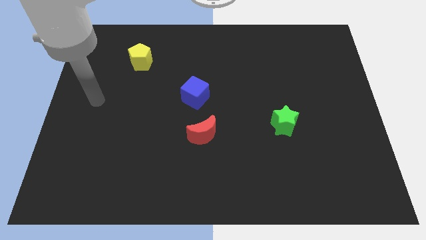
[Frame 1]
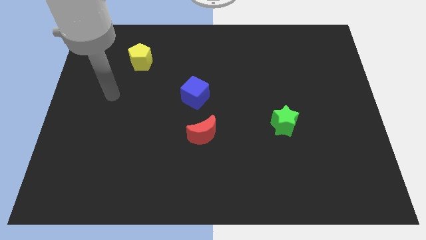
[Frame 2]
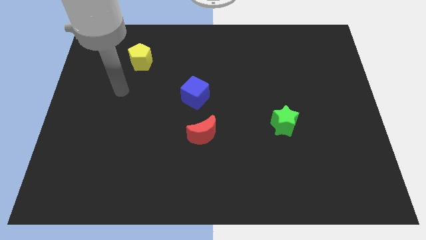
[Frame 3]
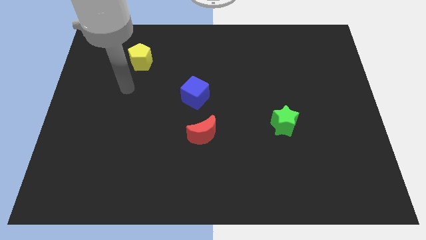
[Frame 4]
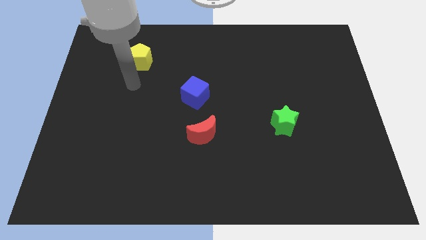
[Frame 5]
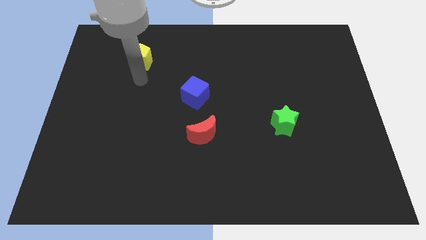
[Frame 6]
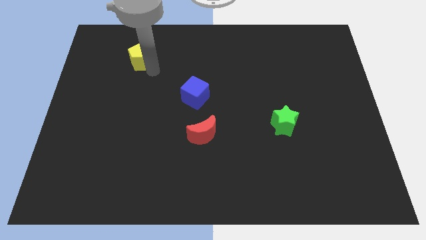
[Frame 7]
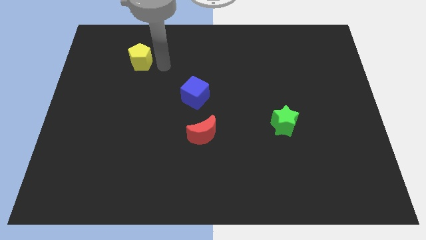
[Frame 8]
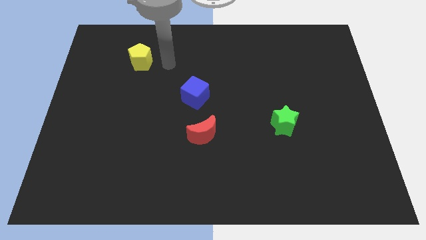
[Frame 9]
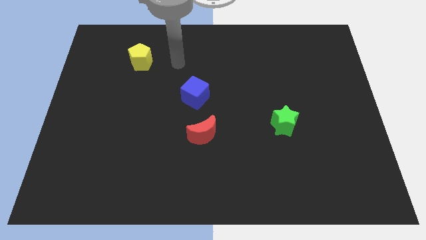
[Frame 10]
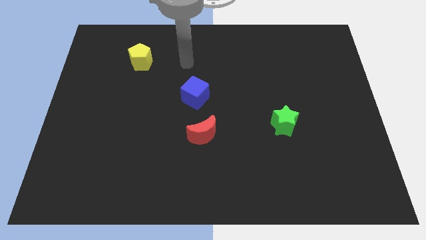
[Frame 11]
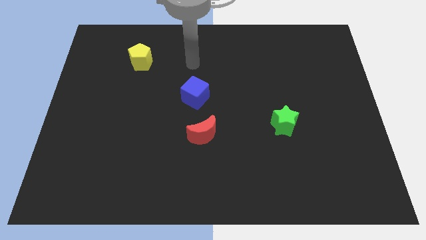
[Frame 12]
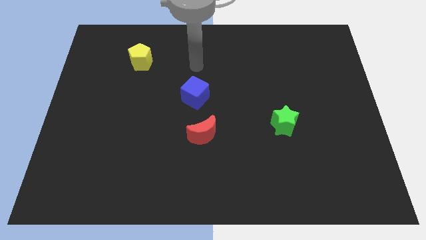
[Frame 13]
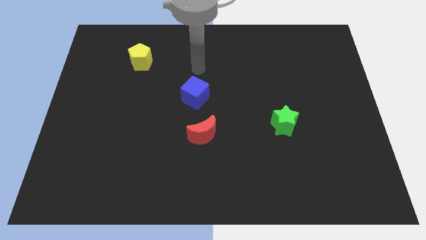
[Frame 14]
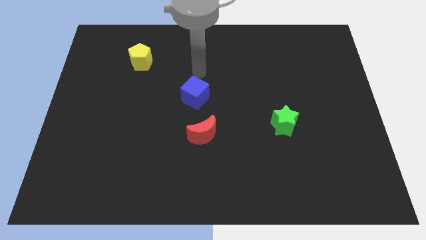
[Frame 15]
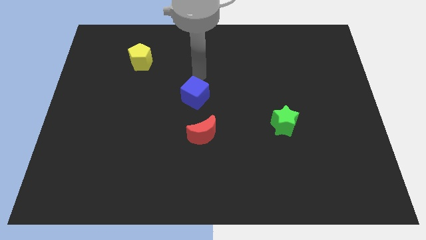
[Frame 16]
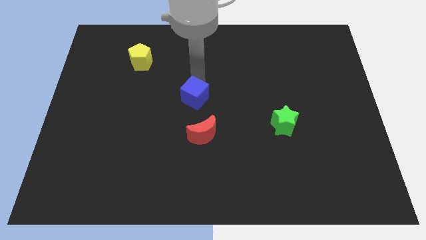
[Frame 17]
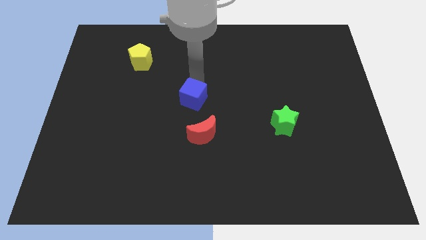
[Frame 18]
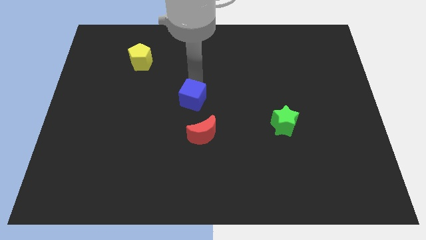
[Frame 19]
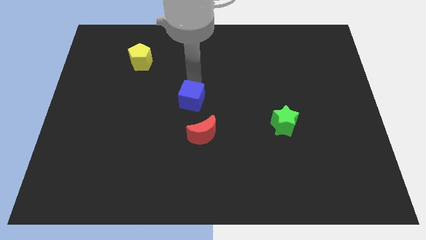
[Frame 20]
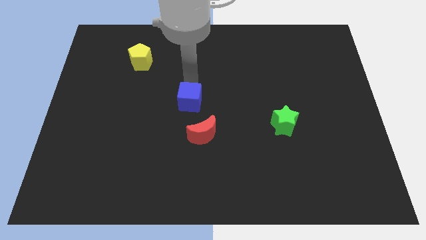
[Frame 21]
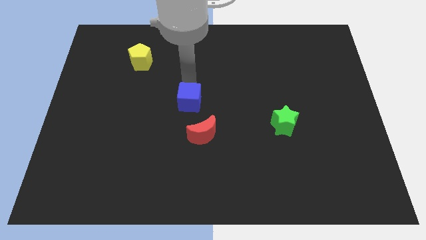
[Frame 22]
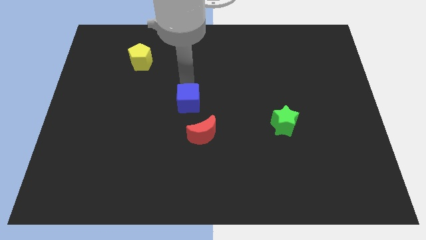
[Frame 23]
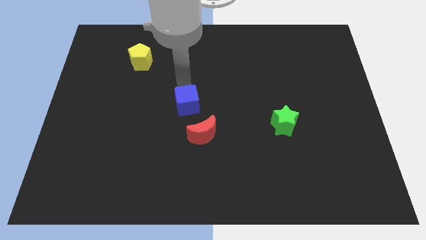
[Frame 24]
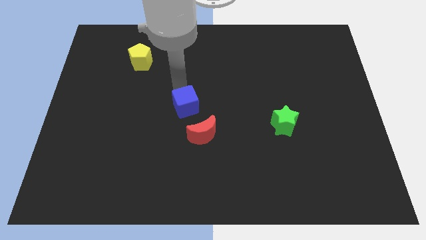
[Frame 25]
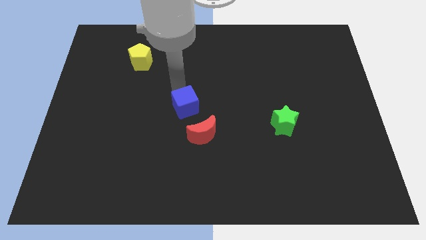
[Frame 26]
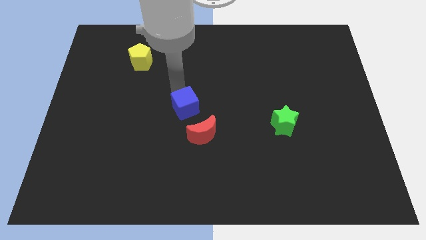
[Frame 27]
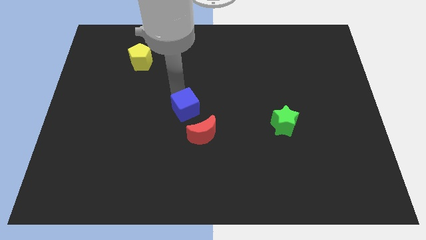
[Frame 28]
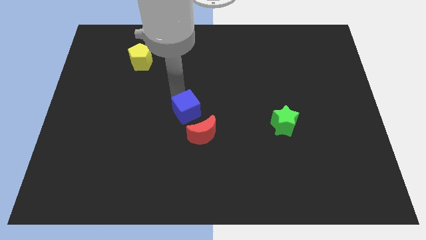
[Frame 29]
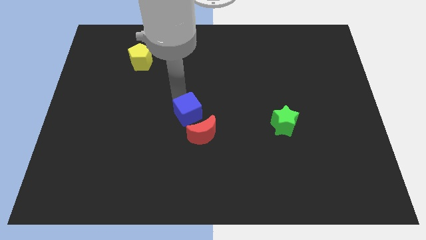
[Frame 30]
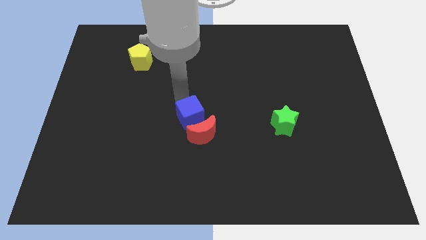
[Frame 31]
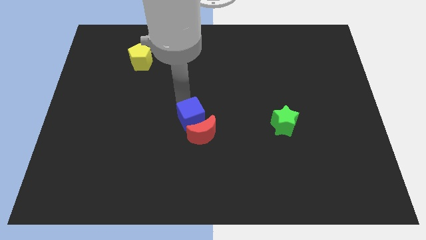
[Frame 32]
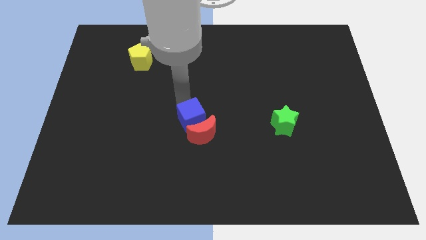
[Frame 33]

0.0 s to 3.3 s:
push the blue block to the moon

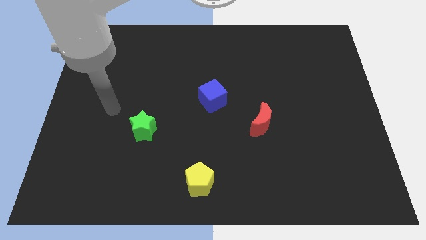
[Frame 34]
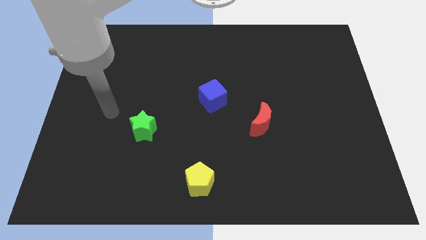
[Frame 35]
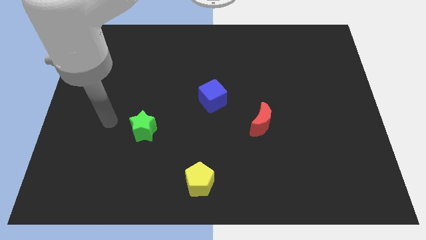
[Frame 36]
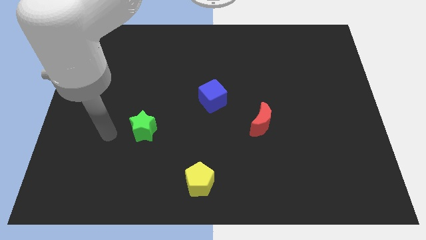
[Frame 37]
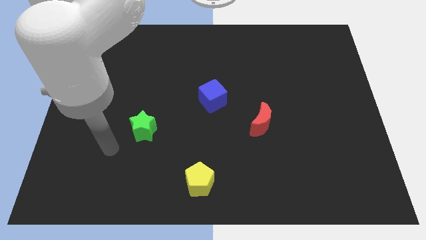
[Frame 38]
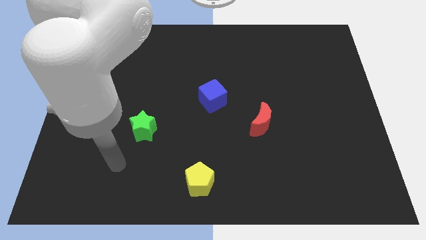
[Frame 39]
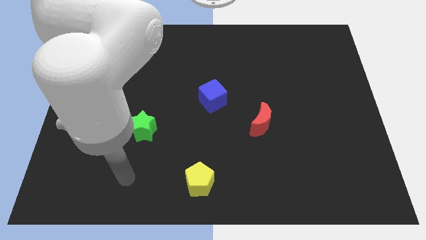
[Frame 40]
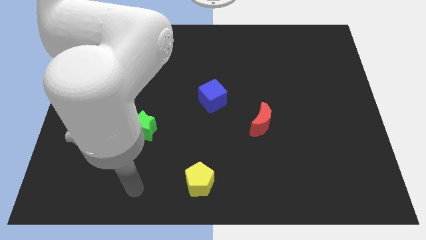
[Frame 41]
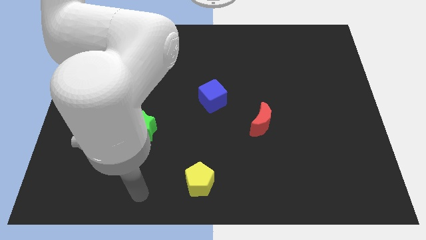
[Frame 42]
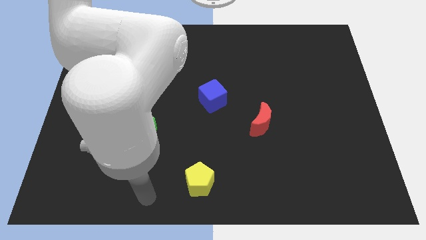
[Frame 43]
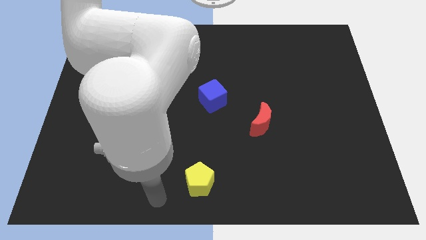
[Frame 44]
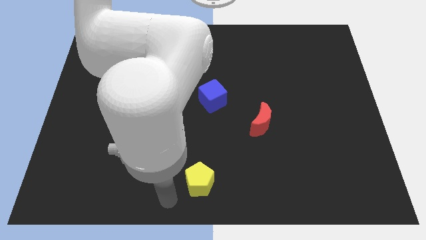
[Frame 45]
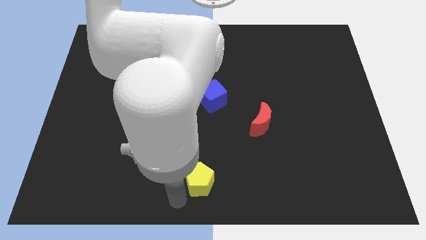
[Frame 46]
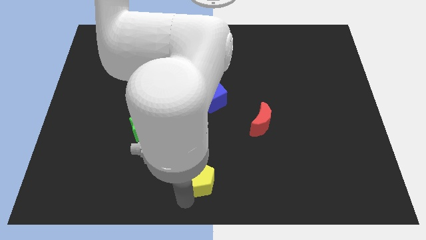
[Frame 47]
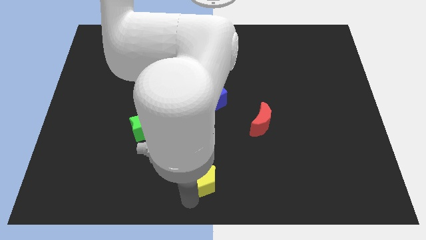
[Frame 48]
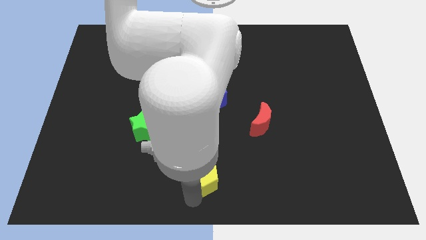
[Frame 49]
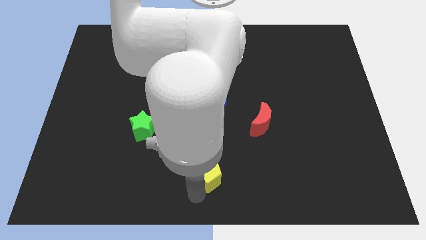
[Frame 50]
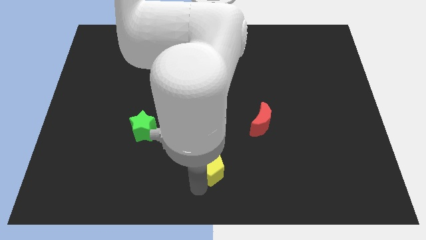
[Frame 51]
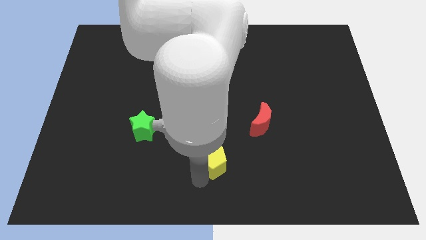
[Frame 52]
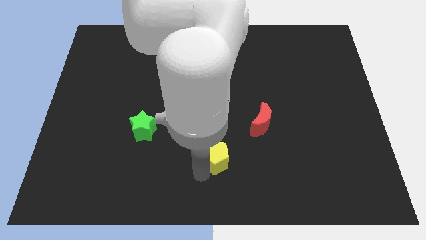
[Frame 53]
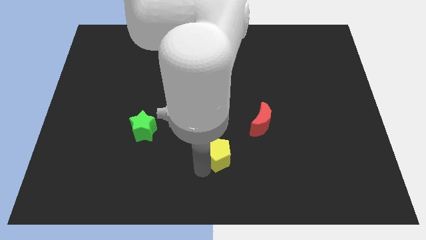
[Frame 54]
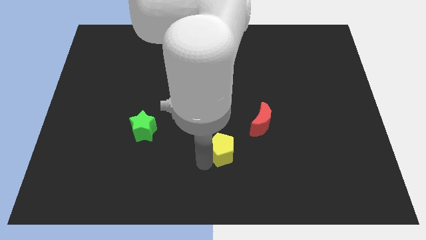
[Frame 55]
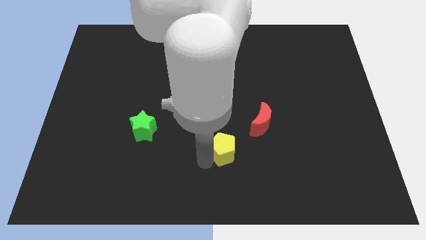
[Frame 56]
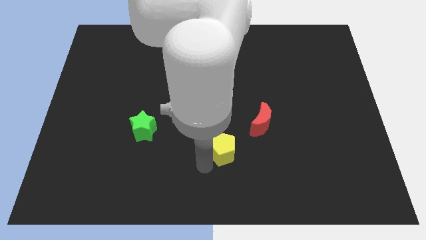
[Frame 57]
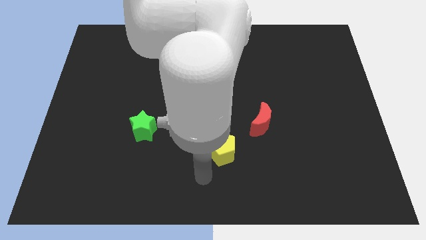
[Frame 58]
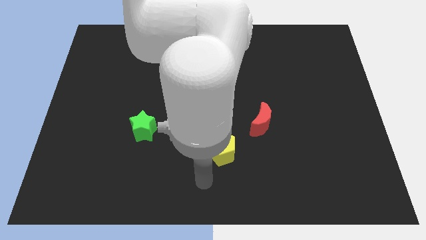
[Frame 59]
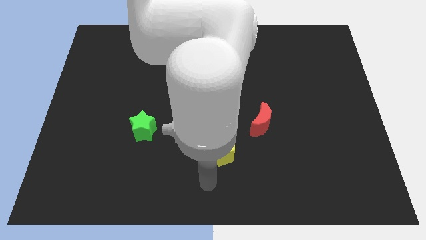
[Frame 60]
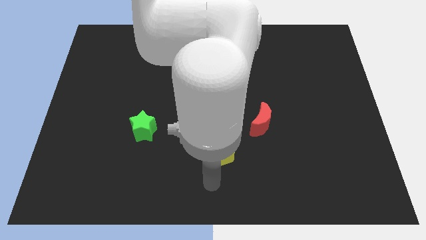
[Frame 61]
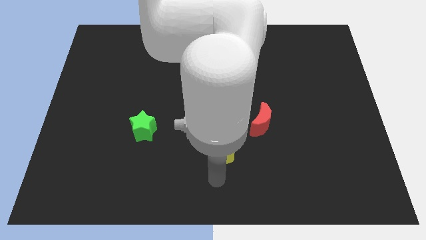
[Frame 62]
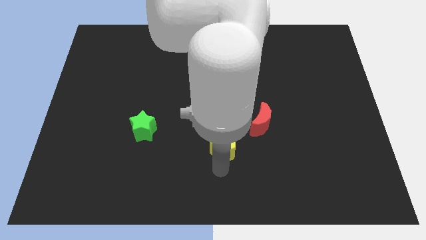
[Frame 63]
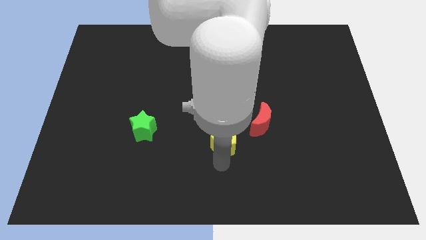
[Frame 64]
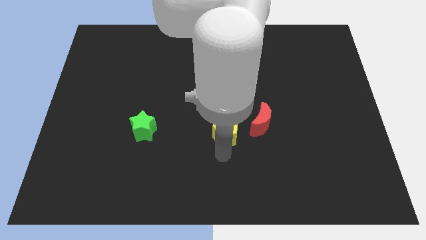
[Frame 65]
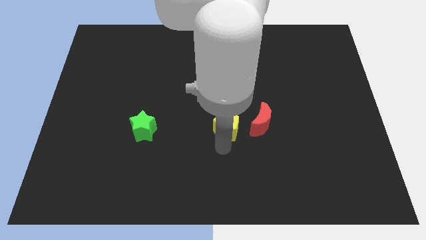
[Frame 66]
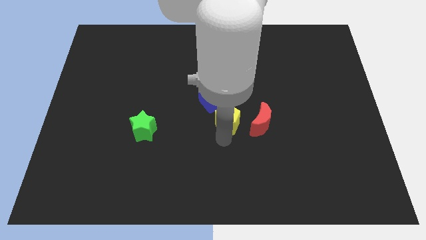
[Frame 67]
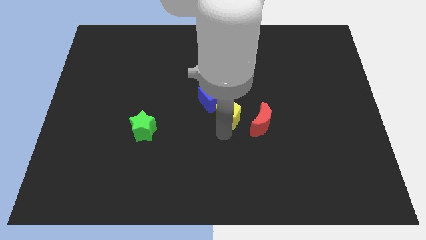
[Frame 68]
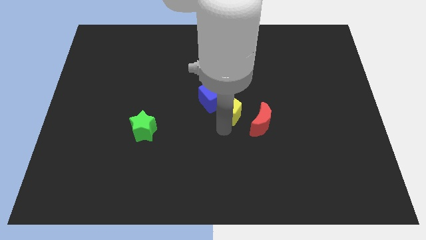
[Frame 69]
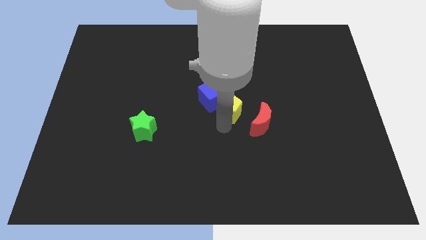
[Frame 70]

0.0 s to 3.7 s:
slide the pentagon towards the blue block

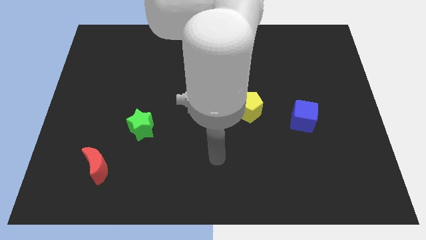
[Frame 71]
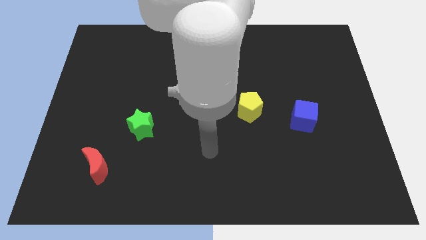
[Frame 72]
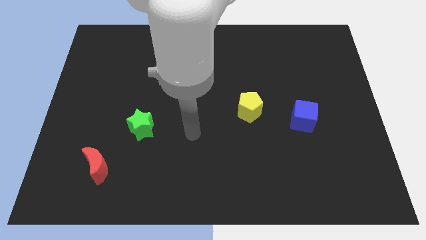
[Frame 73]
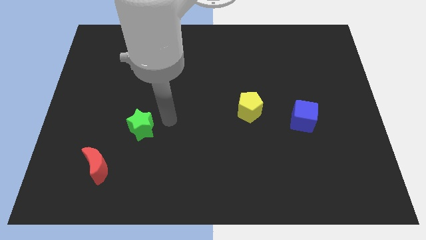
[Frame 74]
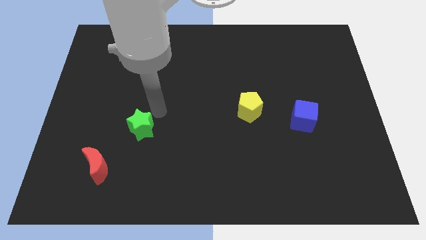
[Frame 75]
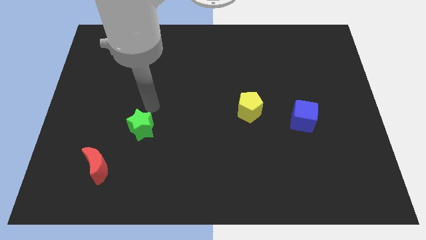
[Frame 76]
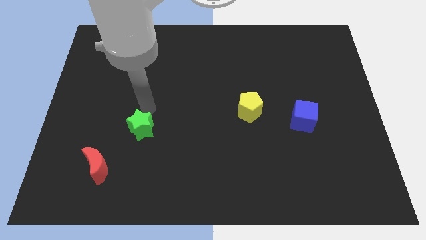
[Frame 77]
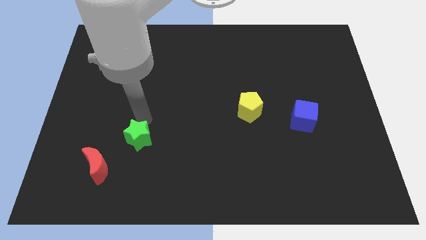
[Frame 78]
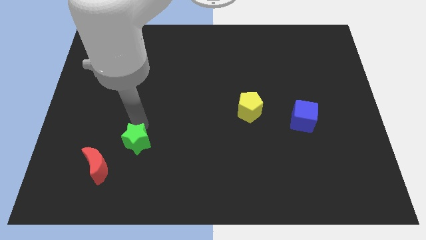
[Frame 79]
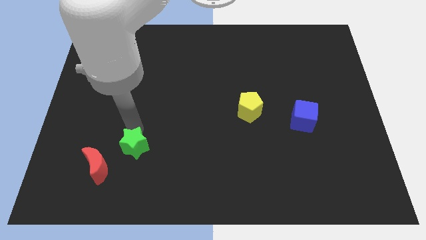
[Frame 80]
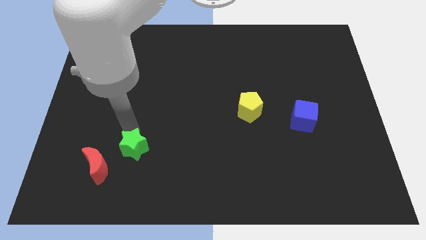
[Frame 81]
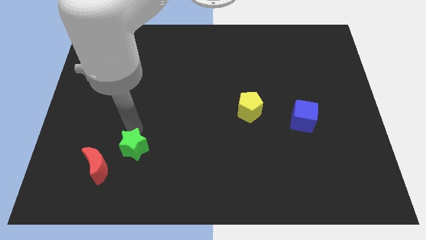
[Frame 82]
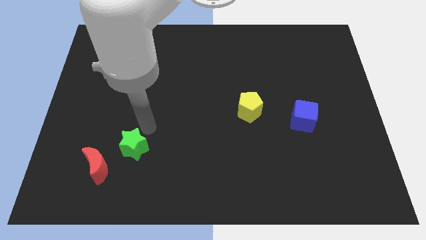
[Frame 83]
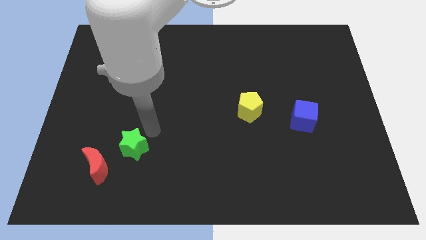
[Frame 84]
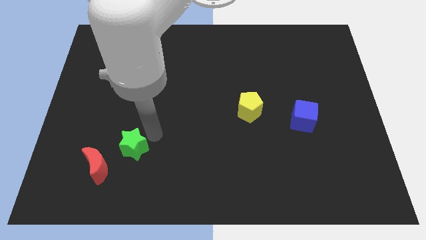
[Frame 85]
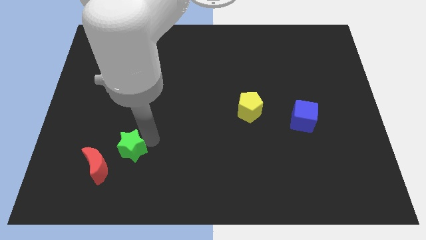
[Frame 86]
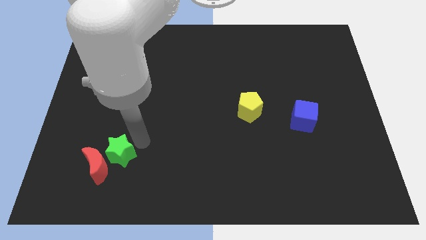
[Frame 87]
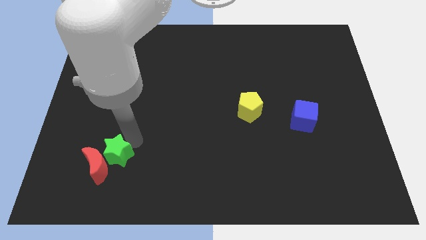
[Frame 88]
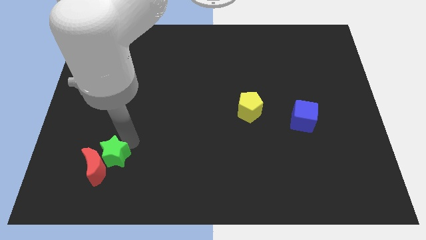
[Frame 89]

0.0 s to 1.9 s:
push the green star close to the red block
